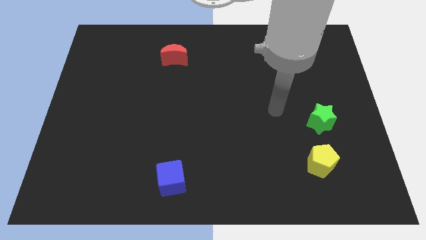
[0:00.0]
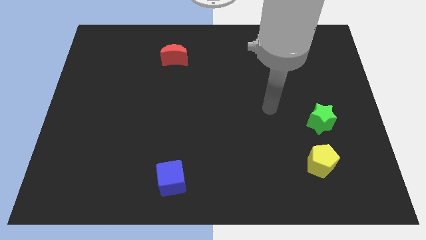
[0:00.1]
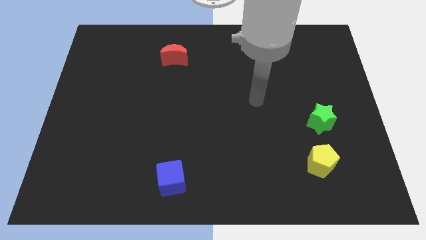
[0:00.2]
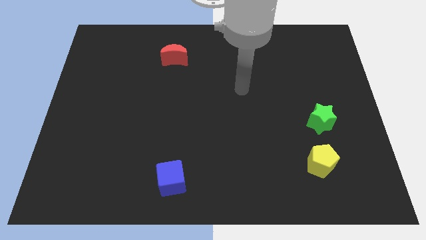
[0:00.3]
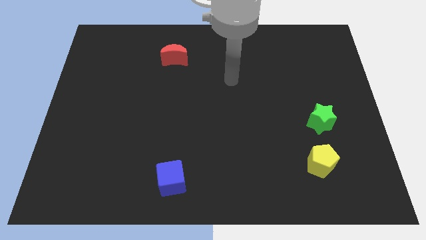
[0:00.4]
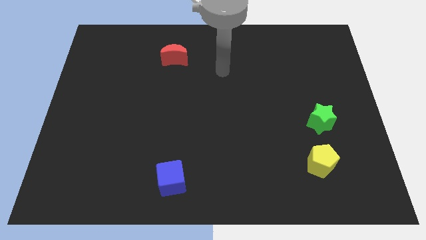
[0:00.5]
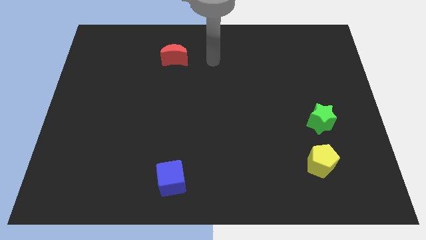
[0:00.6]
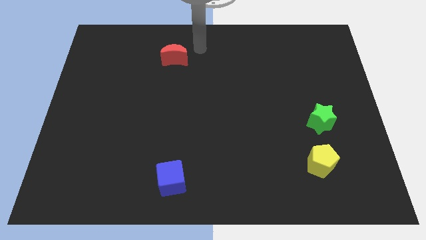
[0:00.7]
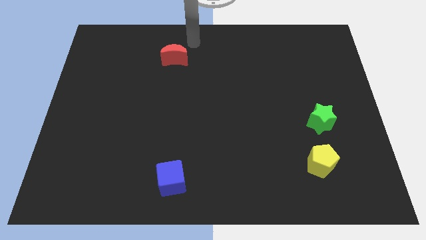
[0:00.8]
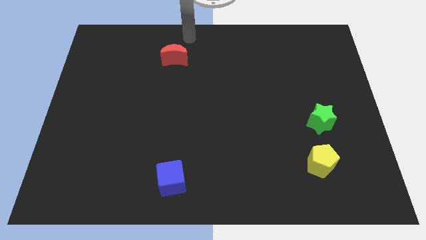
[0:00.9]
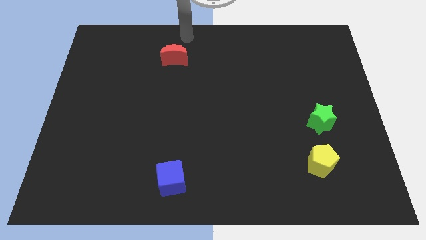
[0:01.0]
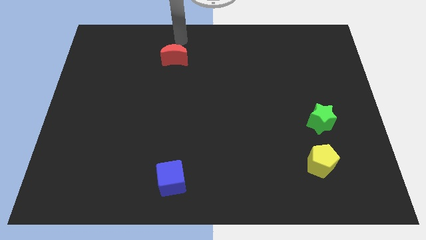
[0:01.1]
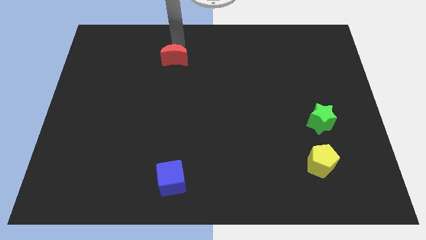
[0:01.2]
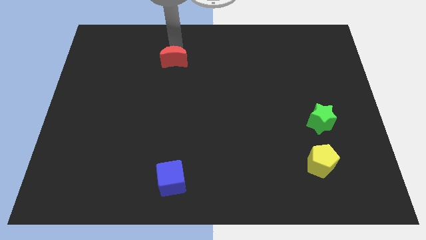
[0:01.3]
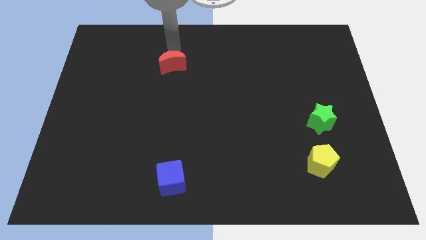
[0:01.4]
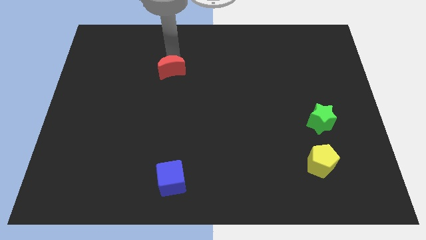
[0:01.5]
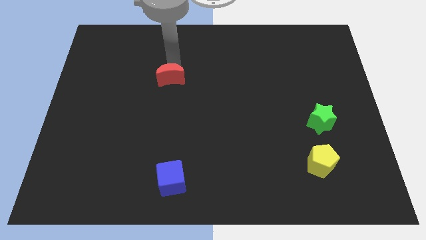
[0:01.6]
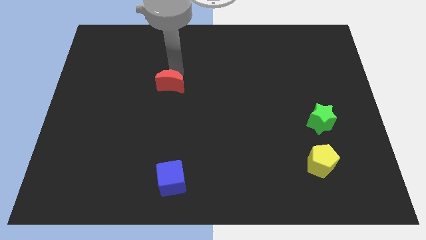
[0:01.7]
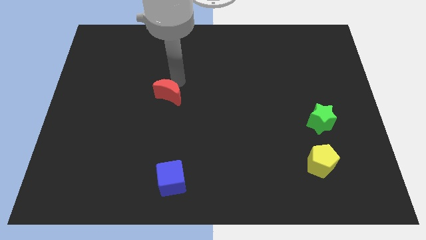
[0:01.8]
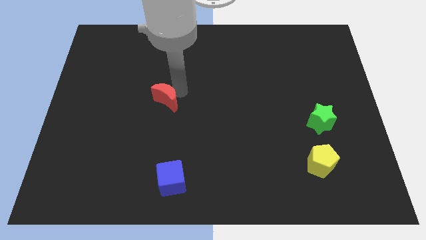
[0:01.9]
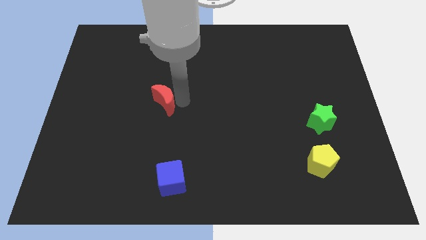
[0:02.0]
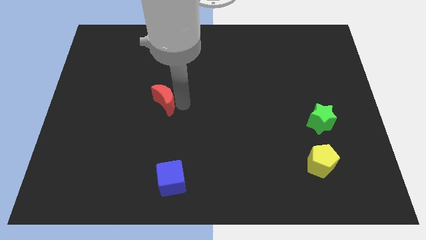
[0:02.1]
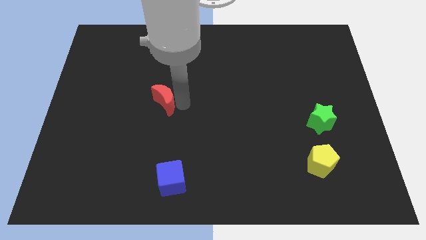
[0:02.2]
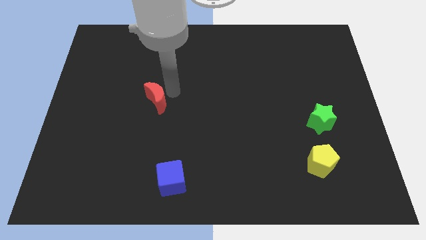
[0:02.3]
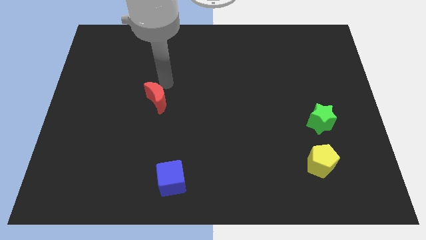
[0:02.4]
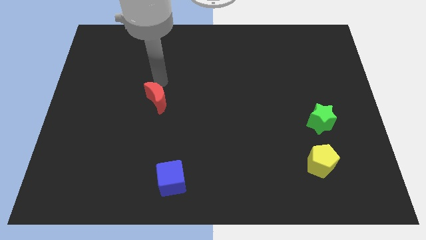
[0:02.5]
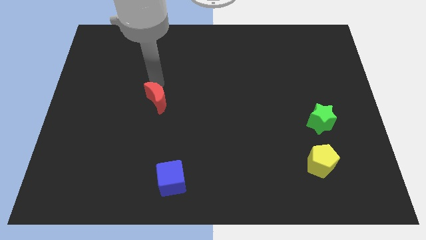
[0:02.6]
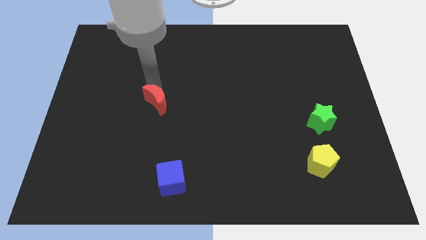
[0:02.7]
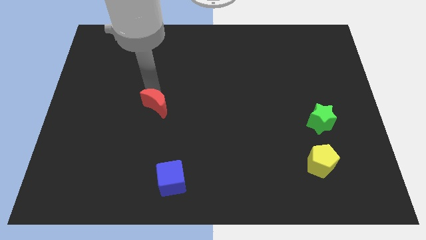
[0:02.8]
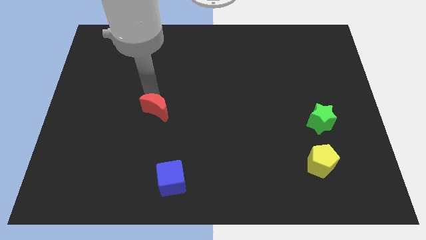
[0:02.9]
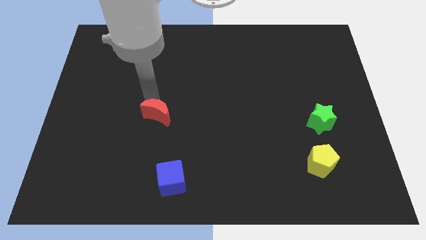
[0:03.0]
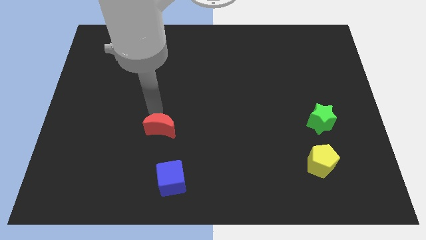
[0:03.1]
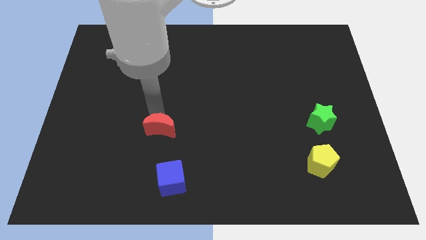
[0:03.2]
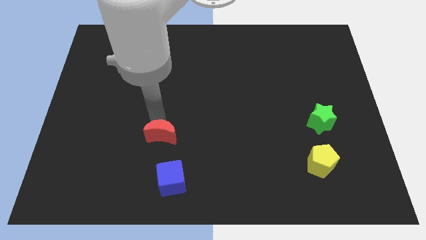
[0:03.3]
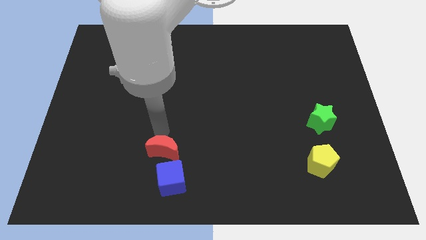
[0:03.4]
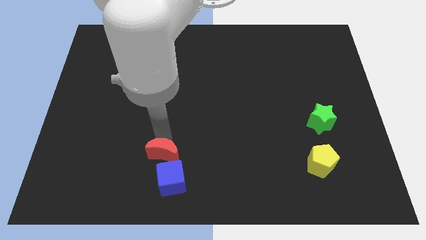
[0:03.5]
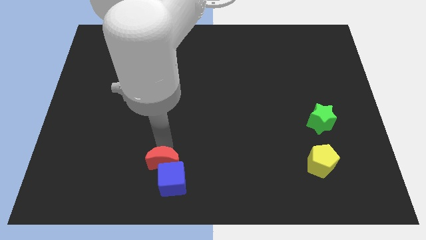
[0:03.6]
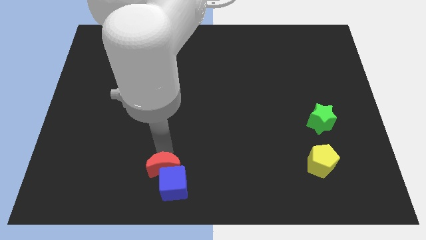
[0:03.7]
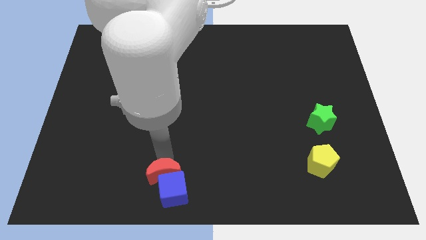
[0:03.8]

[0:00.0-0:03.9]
push the moon to the cube

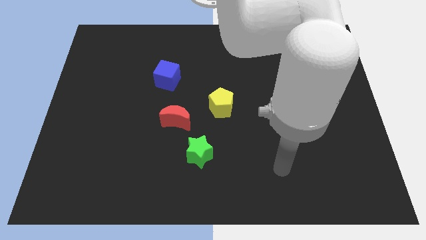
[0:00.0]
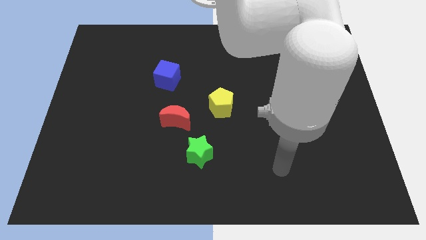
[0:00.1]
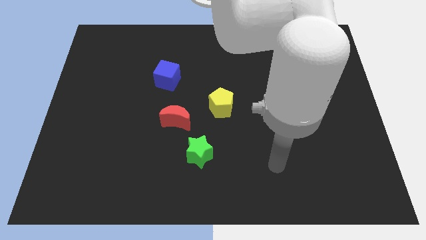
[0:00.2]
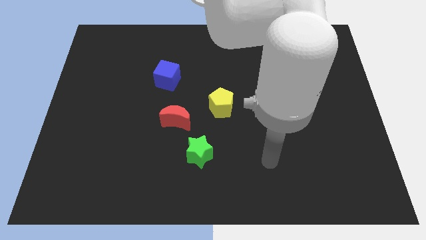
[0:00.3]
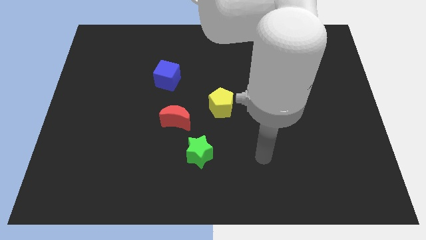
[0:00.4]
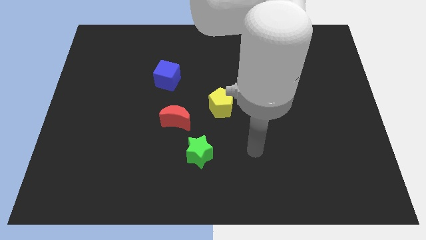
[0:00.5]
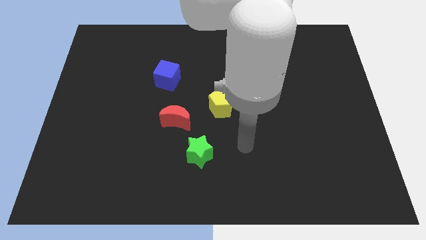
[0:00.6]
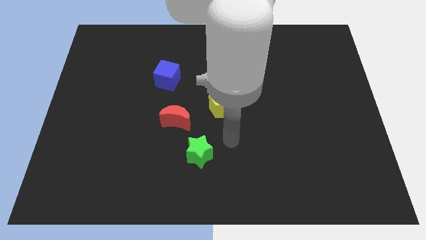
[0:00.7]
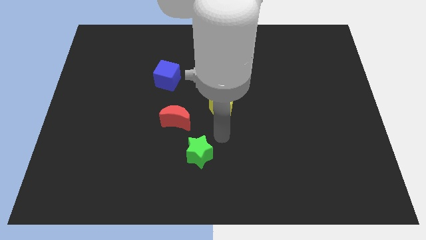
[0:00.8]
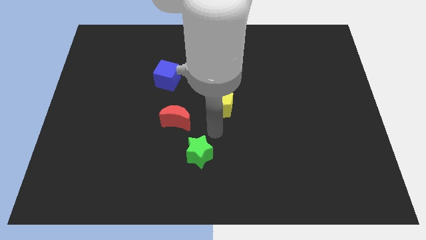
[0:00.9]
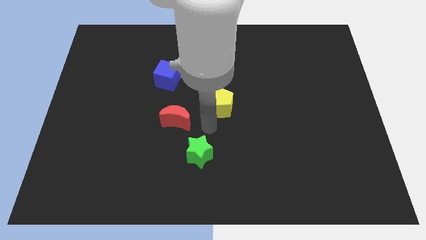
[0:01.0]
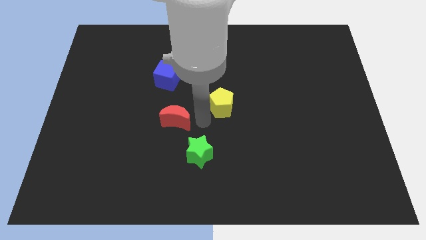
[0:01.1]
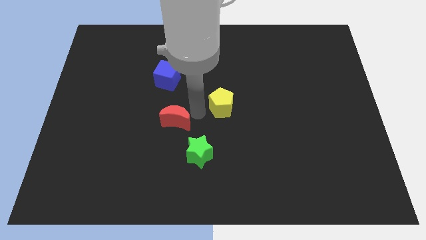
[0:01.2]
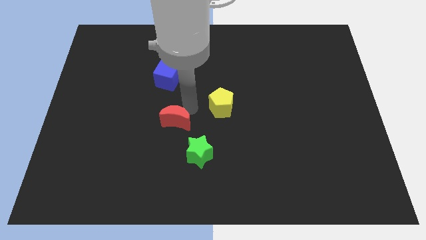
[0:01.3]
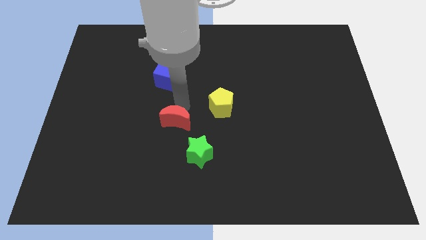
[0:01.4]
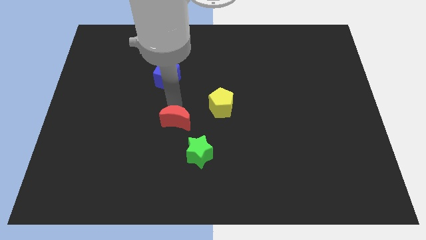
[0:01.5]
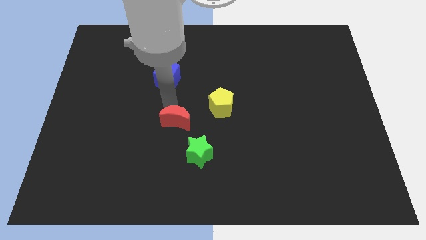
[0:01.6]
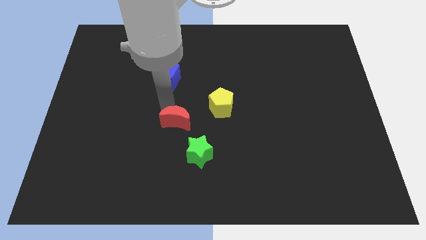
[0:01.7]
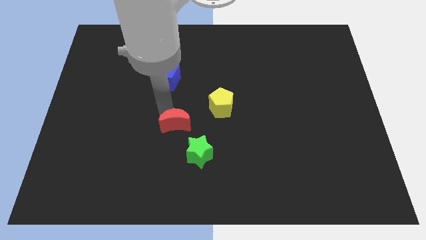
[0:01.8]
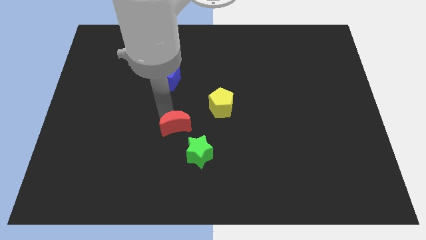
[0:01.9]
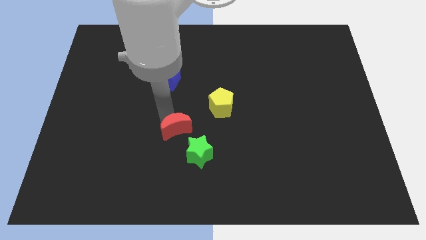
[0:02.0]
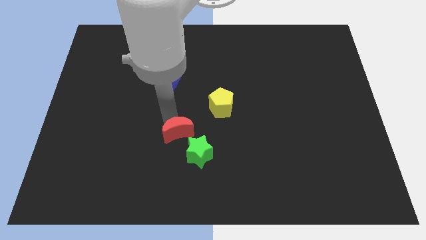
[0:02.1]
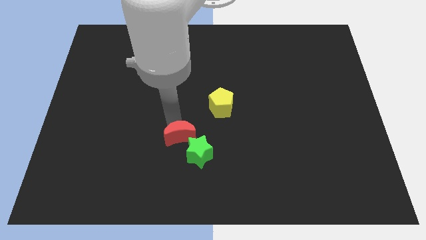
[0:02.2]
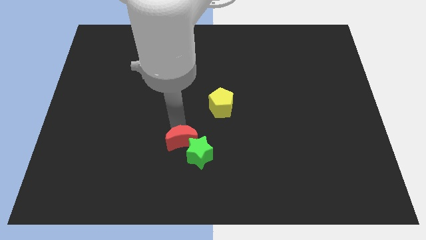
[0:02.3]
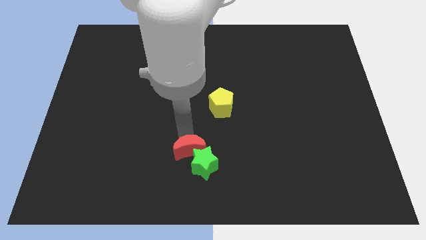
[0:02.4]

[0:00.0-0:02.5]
push the red moon close to the green block

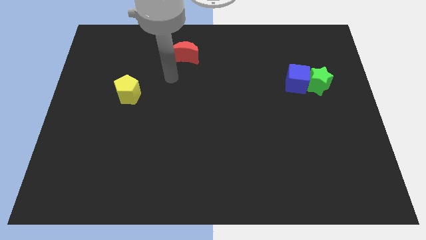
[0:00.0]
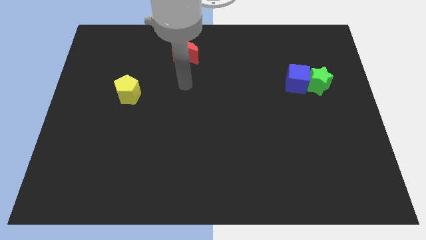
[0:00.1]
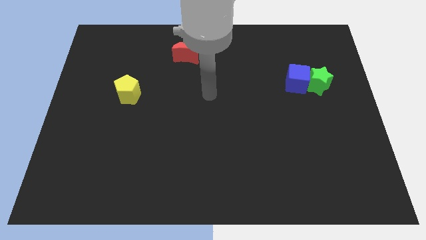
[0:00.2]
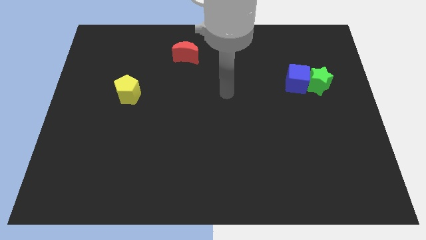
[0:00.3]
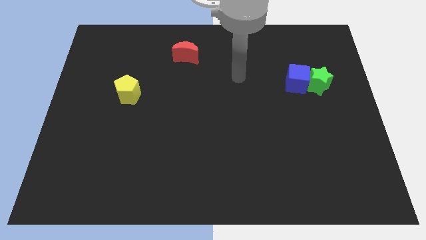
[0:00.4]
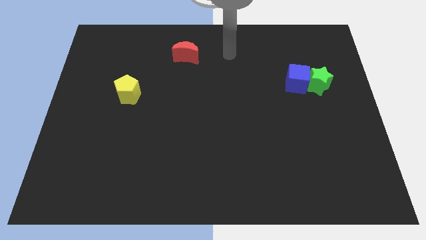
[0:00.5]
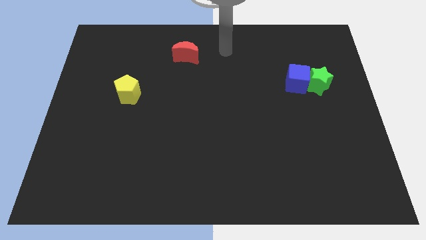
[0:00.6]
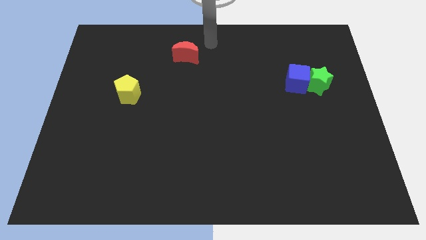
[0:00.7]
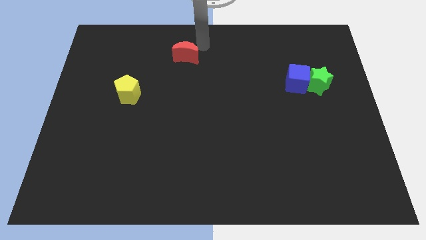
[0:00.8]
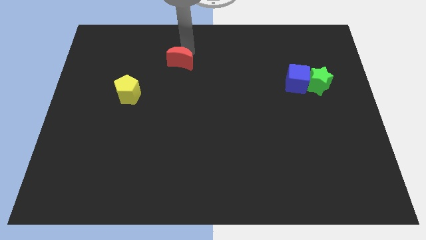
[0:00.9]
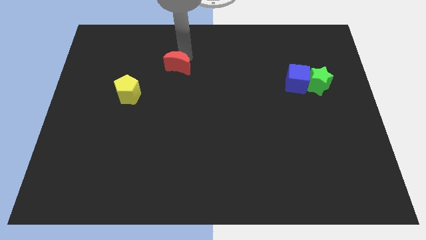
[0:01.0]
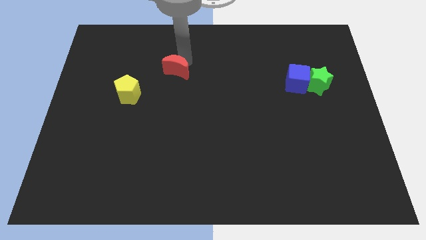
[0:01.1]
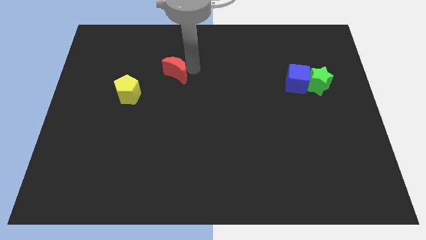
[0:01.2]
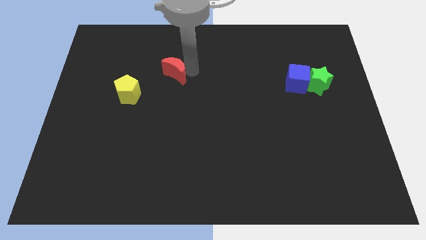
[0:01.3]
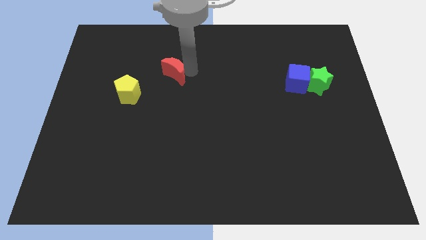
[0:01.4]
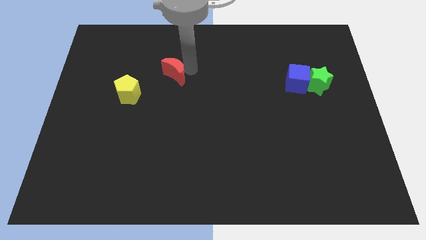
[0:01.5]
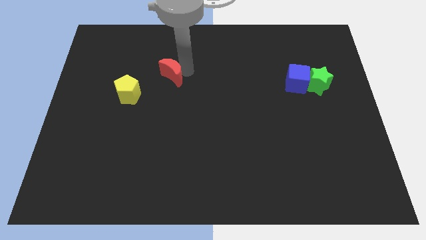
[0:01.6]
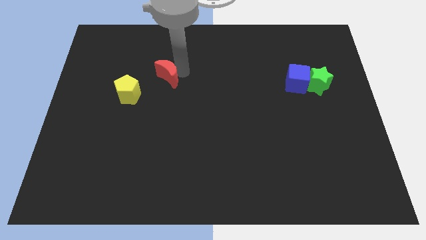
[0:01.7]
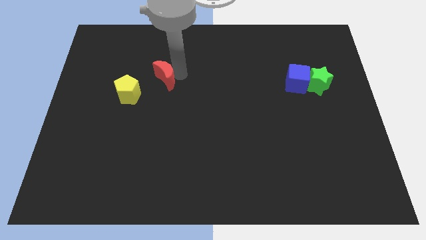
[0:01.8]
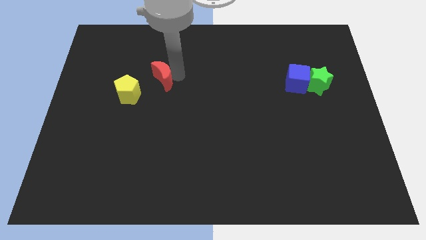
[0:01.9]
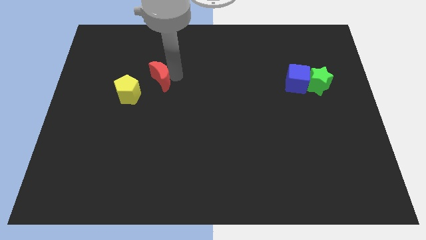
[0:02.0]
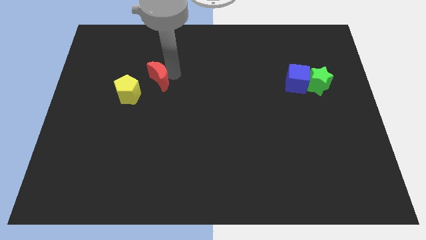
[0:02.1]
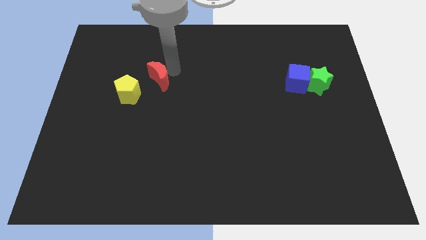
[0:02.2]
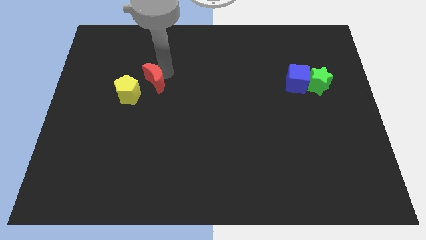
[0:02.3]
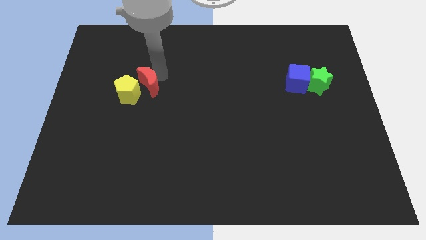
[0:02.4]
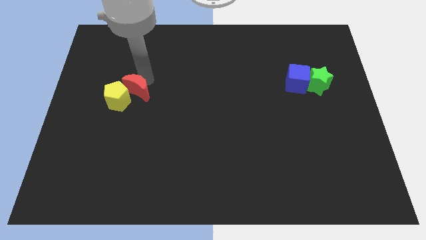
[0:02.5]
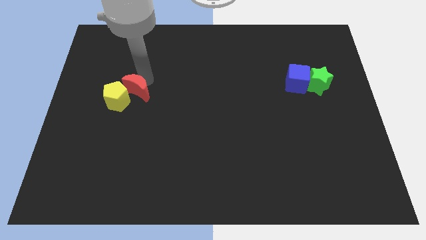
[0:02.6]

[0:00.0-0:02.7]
slide the moon to the yellow block
